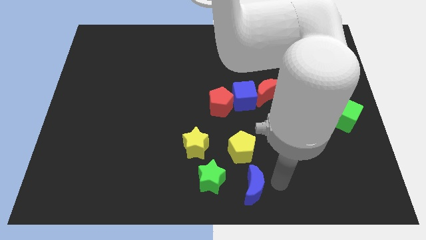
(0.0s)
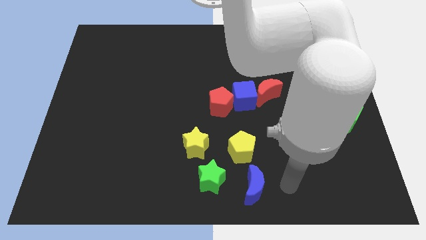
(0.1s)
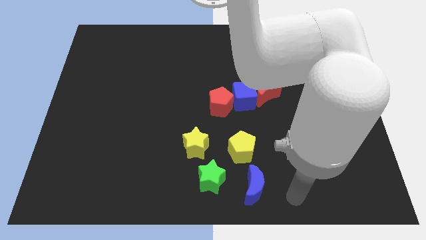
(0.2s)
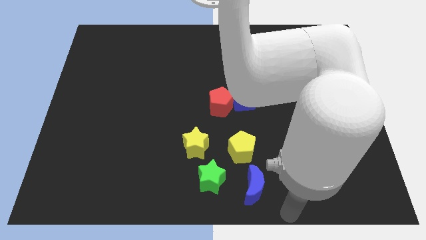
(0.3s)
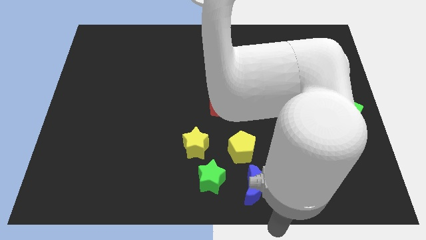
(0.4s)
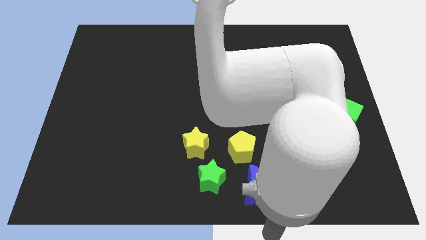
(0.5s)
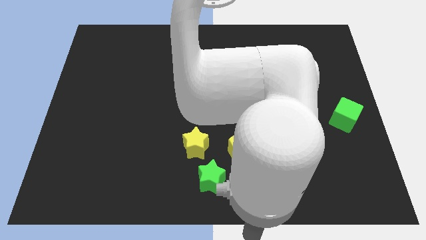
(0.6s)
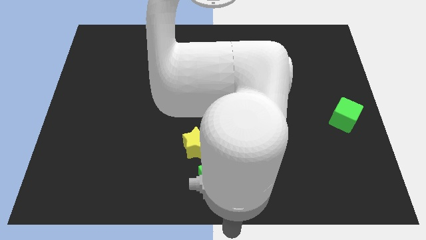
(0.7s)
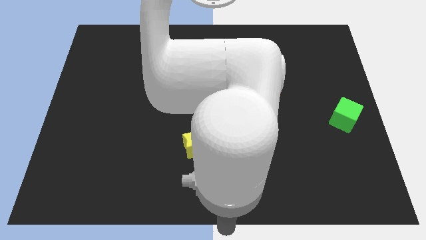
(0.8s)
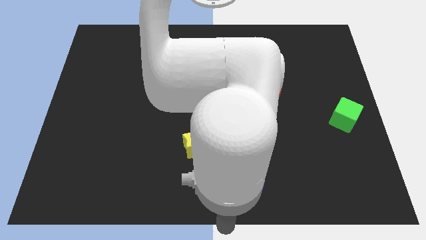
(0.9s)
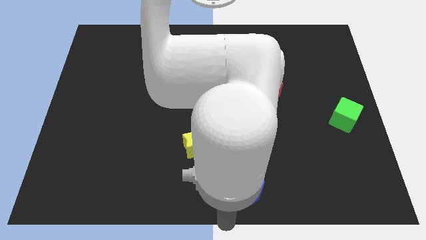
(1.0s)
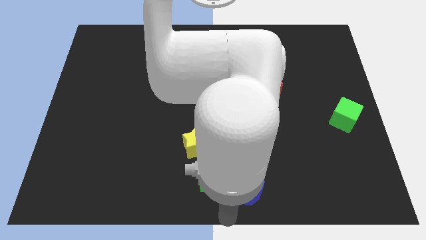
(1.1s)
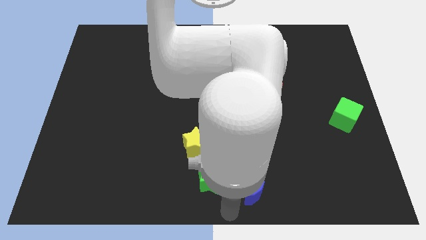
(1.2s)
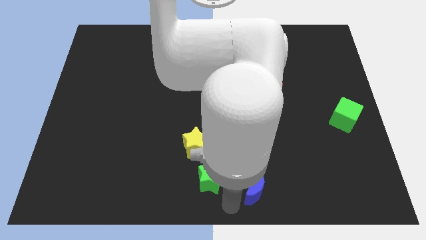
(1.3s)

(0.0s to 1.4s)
move your arm towards the bottom center of the board

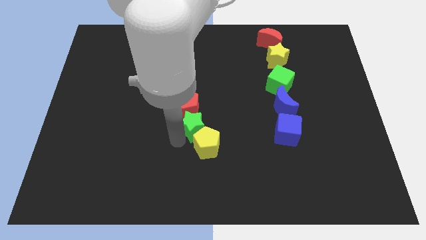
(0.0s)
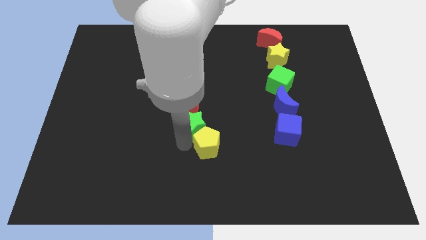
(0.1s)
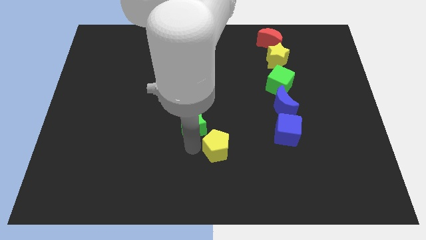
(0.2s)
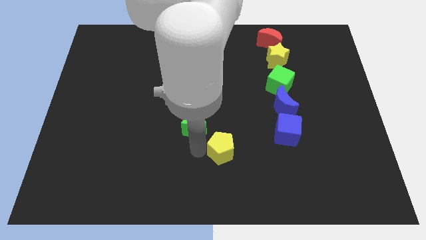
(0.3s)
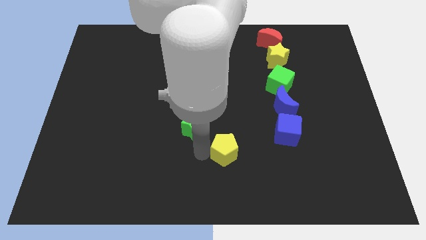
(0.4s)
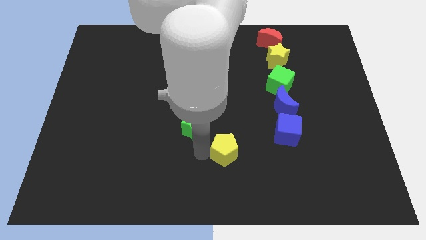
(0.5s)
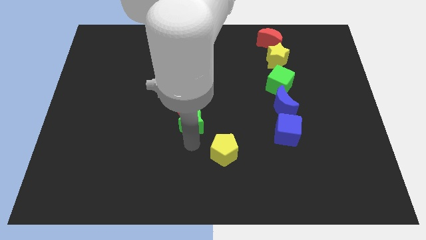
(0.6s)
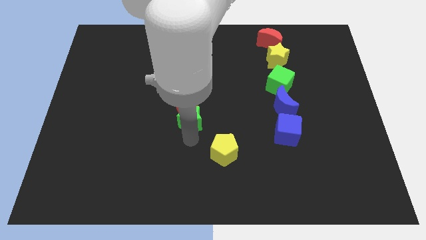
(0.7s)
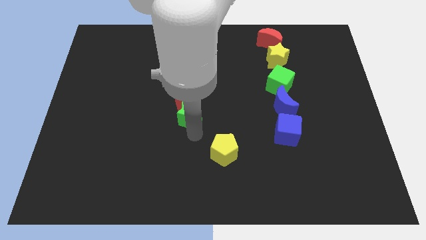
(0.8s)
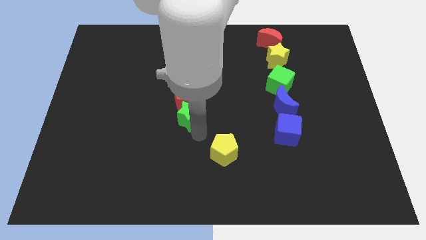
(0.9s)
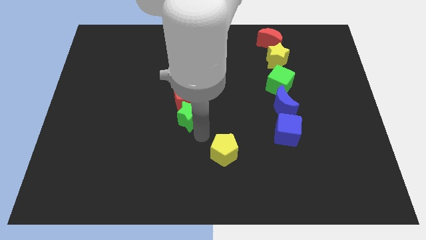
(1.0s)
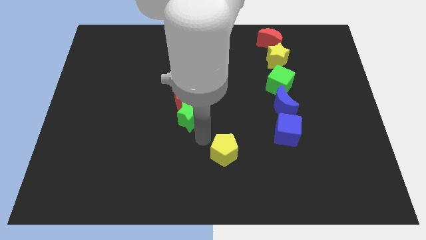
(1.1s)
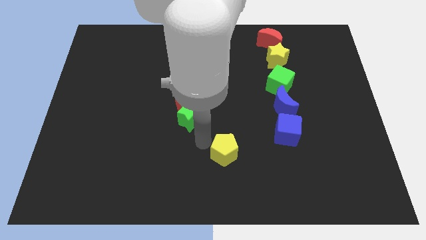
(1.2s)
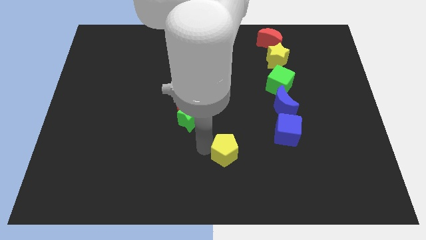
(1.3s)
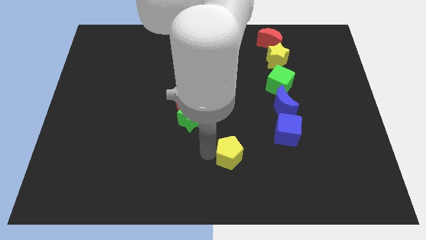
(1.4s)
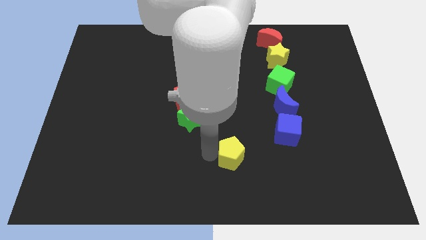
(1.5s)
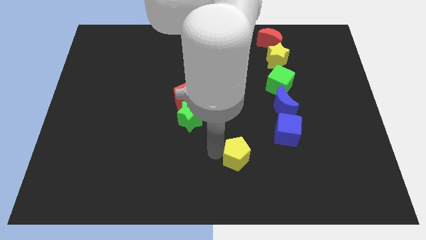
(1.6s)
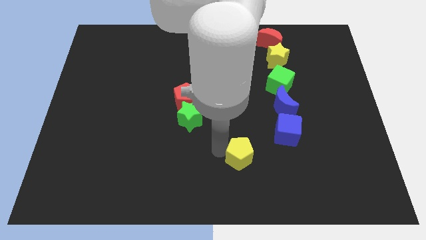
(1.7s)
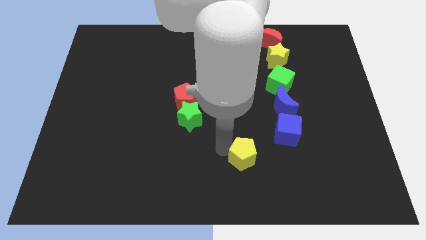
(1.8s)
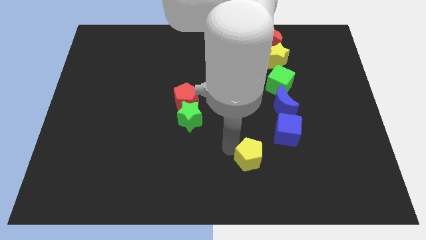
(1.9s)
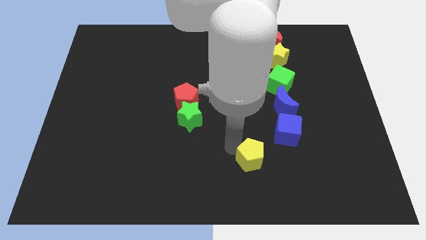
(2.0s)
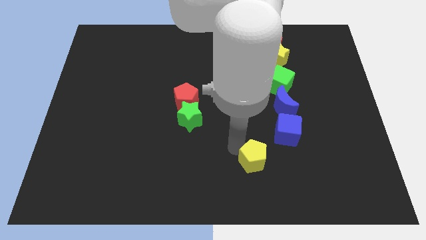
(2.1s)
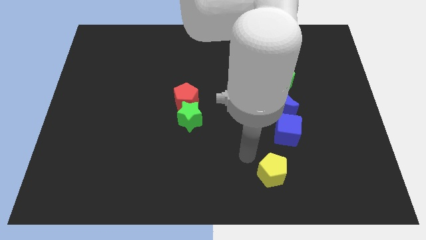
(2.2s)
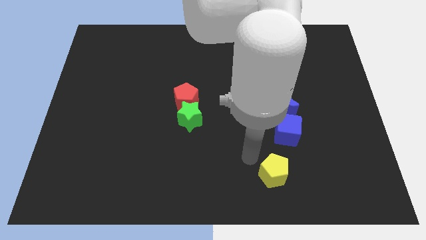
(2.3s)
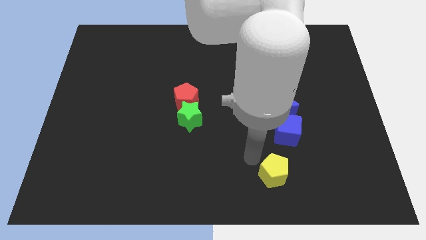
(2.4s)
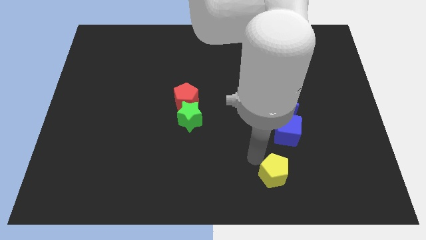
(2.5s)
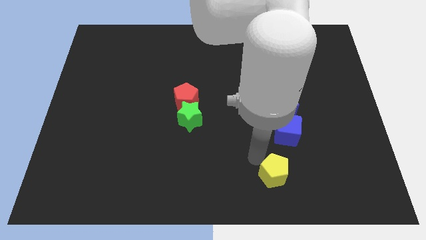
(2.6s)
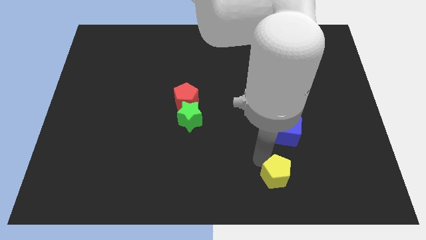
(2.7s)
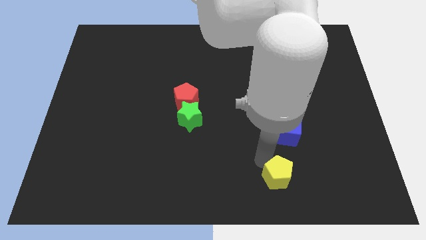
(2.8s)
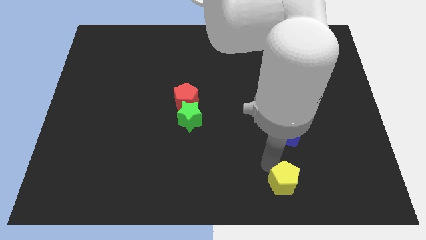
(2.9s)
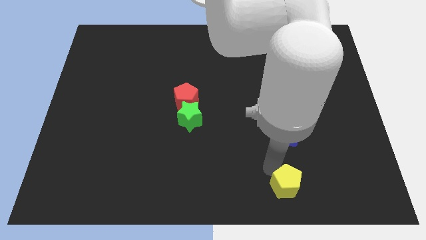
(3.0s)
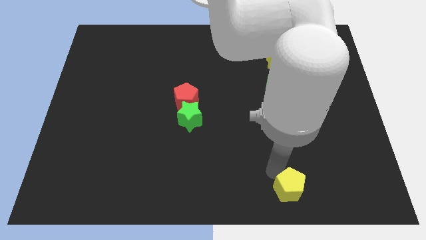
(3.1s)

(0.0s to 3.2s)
move the yellow pentagon vertically below the blue cube

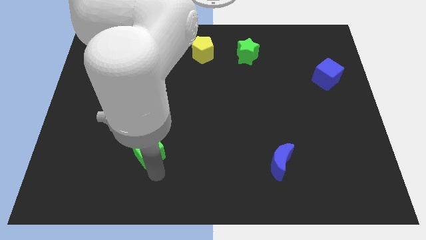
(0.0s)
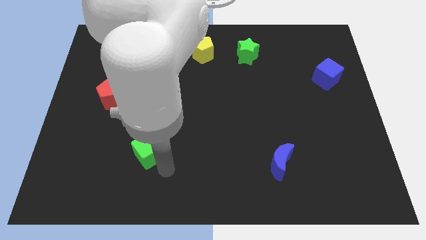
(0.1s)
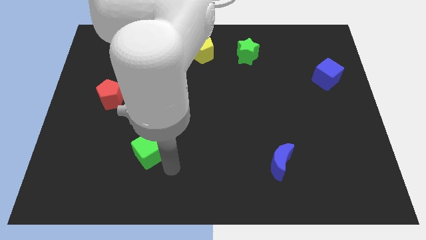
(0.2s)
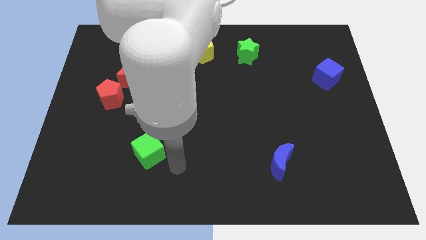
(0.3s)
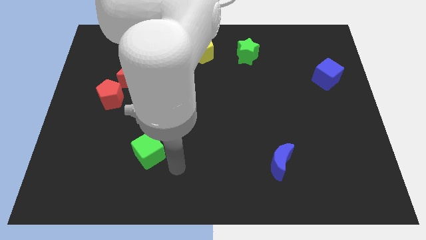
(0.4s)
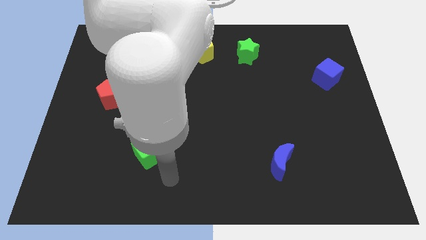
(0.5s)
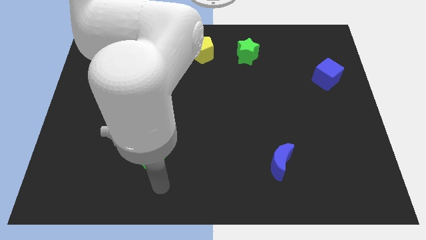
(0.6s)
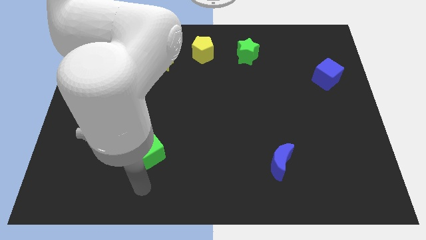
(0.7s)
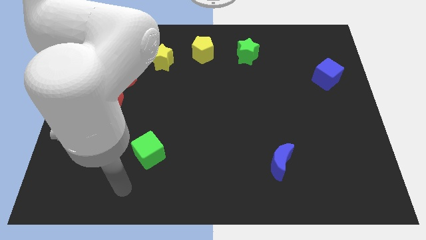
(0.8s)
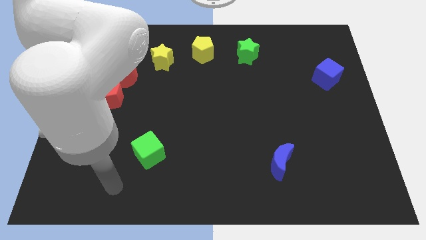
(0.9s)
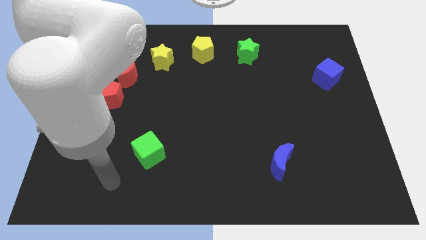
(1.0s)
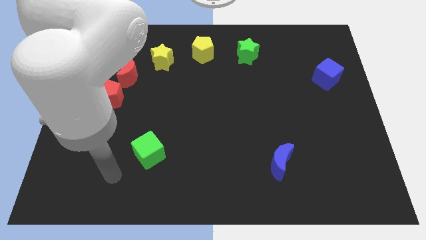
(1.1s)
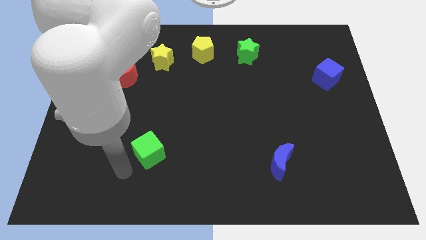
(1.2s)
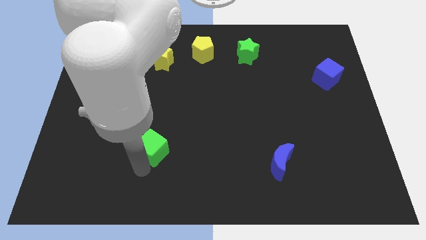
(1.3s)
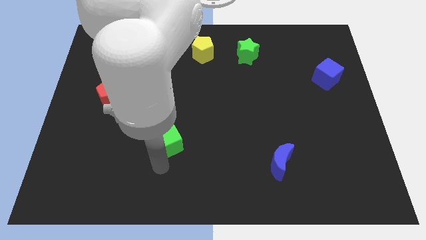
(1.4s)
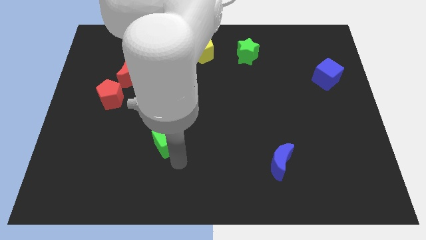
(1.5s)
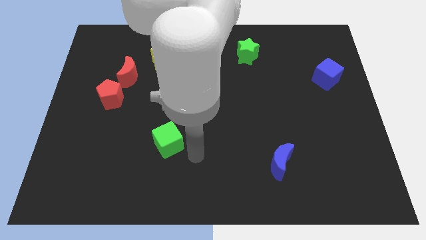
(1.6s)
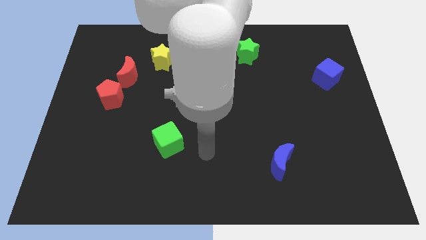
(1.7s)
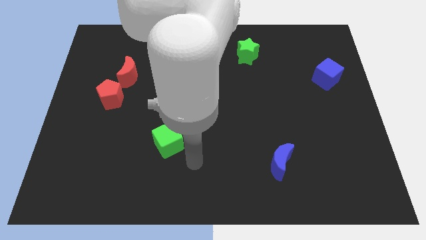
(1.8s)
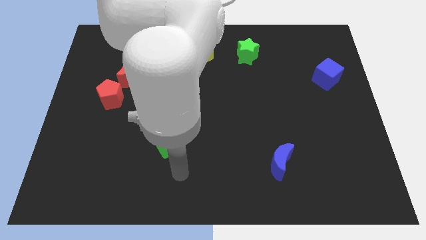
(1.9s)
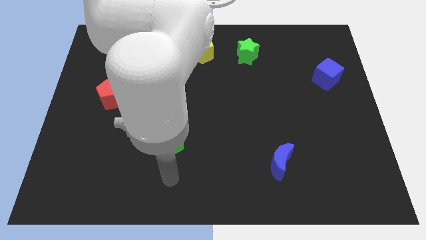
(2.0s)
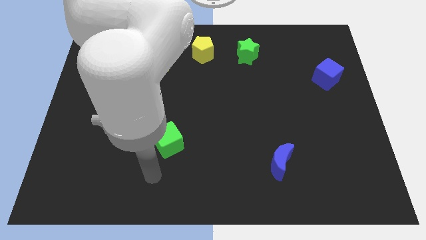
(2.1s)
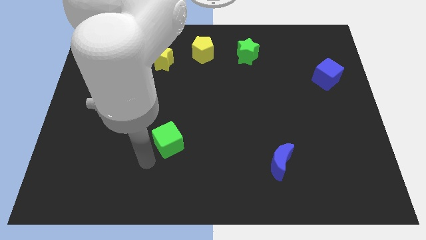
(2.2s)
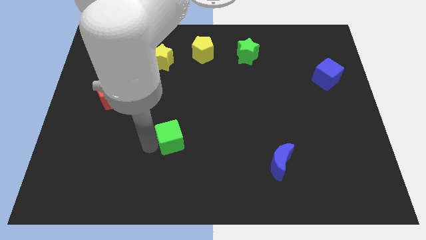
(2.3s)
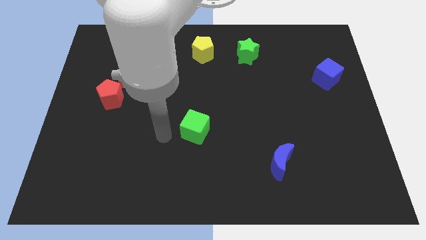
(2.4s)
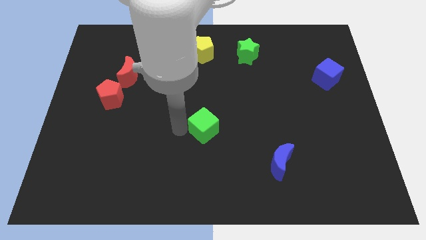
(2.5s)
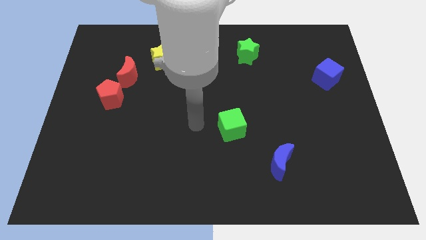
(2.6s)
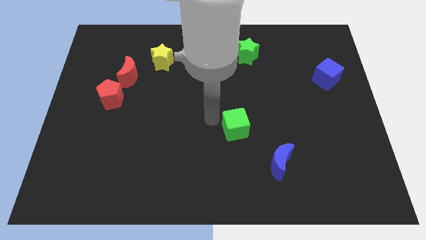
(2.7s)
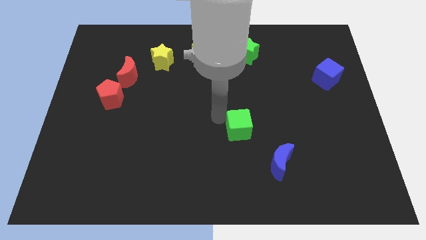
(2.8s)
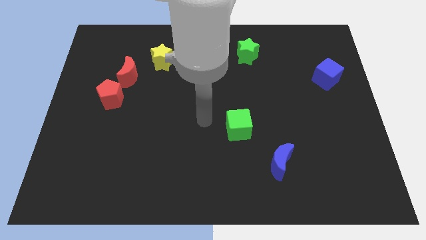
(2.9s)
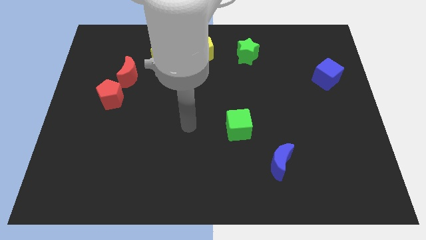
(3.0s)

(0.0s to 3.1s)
slide green cube to the top left of blue moon

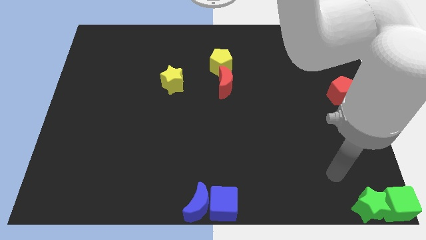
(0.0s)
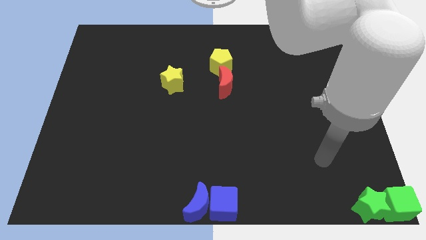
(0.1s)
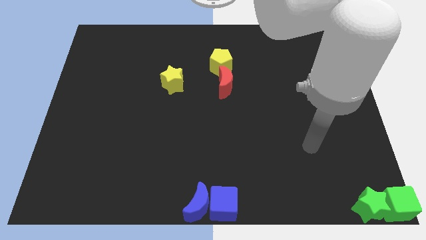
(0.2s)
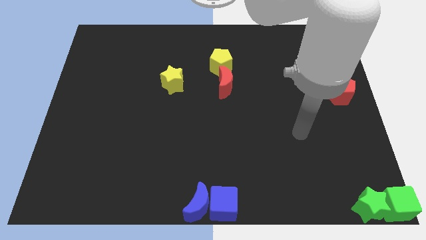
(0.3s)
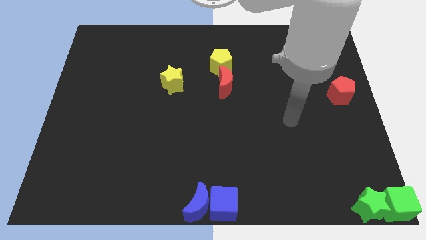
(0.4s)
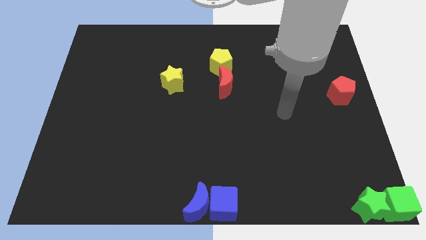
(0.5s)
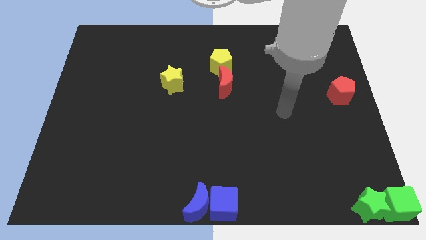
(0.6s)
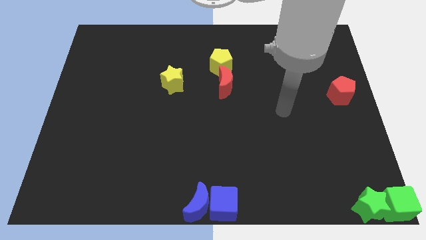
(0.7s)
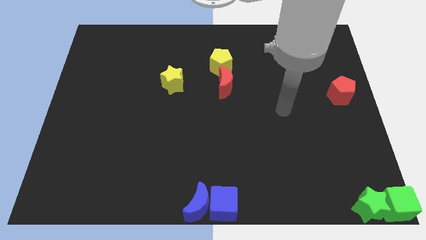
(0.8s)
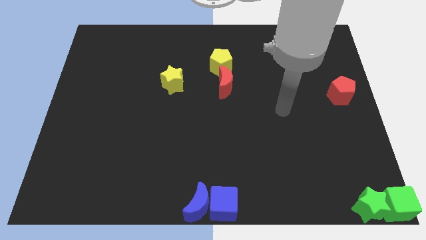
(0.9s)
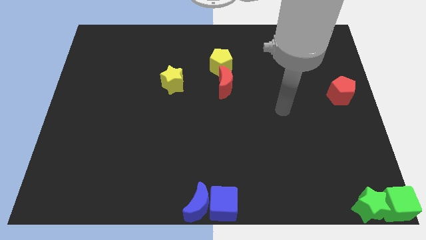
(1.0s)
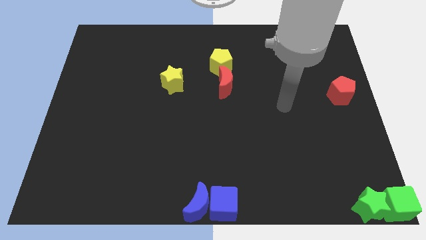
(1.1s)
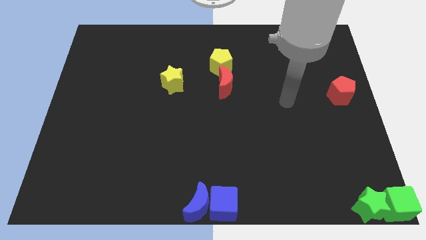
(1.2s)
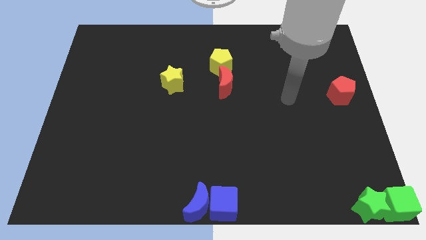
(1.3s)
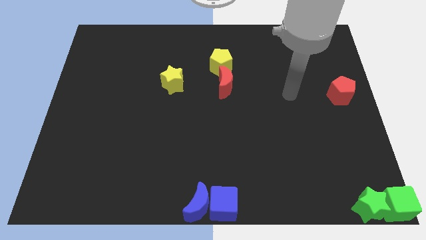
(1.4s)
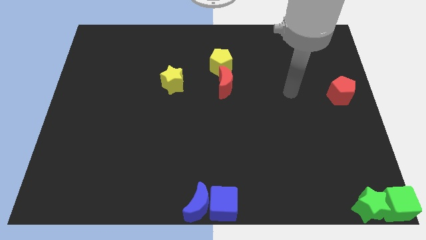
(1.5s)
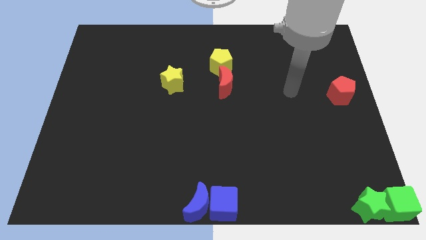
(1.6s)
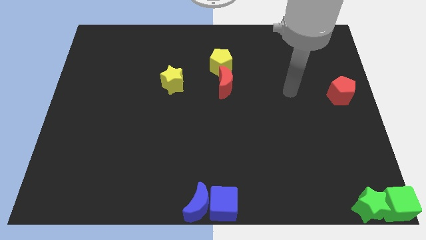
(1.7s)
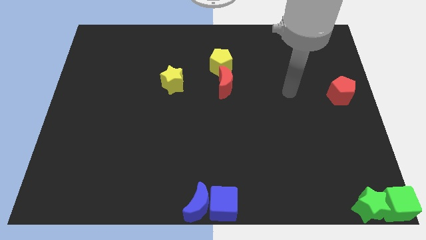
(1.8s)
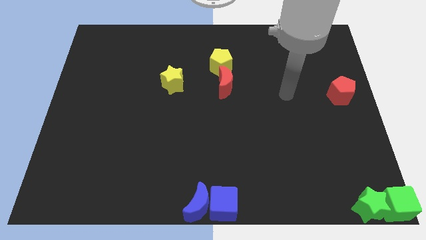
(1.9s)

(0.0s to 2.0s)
place your arm in between the red crescent and red pentagon
